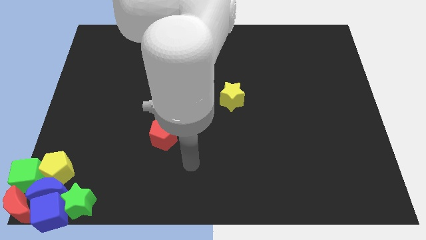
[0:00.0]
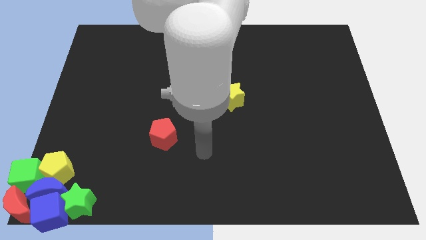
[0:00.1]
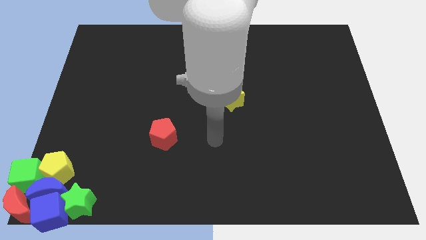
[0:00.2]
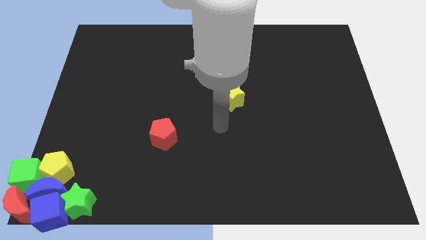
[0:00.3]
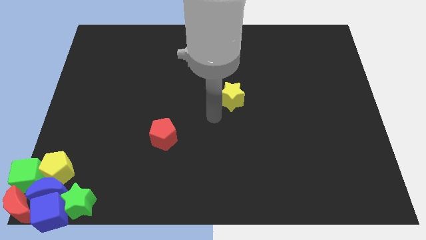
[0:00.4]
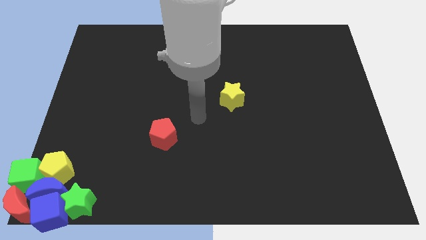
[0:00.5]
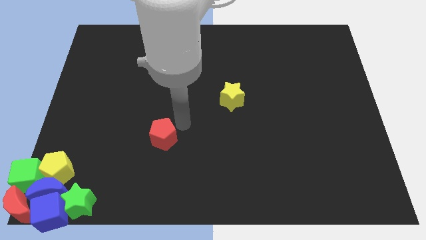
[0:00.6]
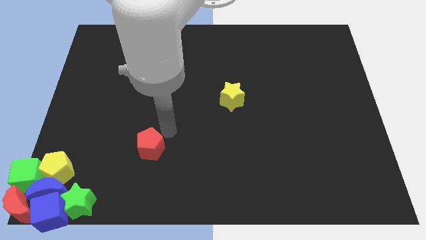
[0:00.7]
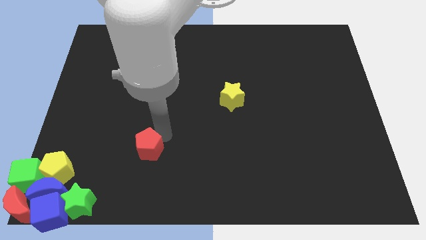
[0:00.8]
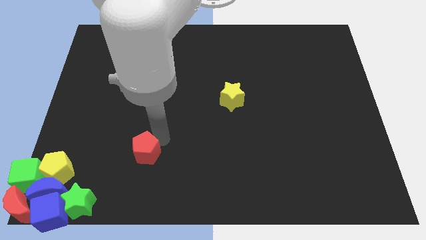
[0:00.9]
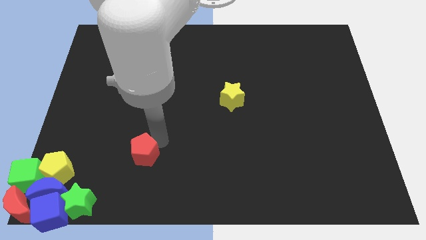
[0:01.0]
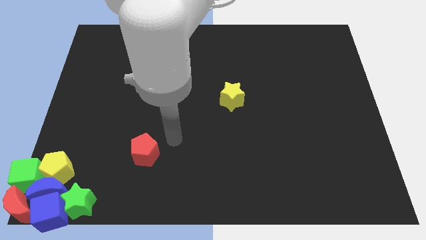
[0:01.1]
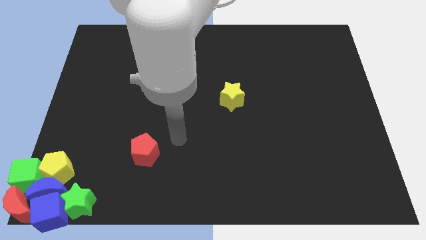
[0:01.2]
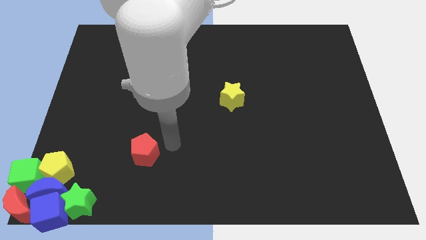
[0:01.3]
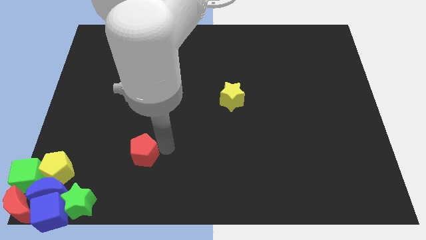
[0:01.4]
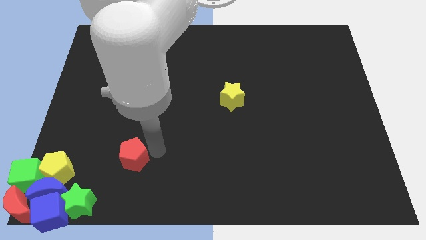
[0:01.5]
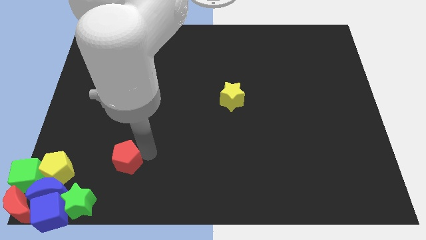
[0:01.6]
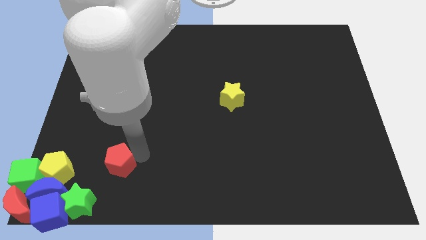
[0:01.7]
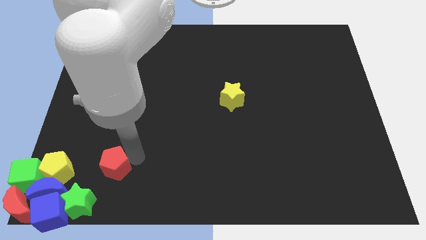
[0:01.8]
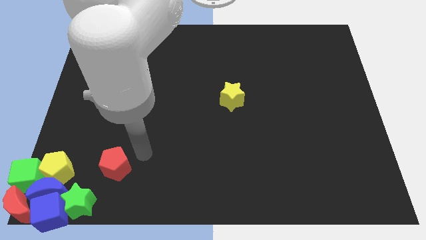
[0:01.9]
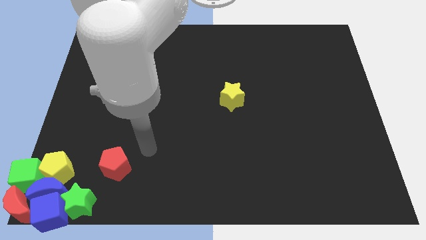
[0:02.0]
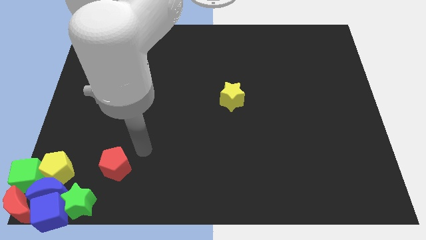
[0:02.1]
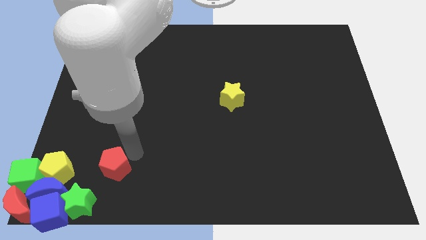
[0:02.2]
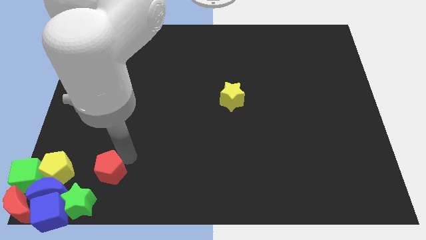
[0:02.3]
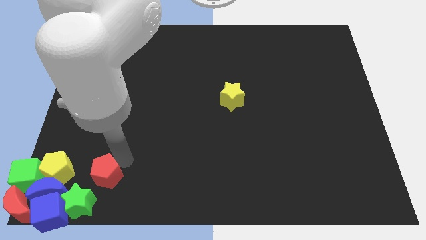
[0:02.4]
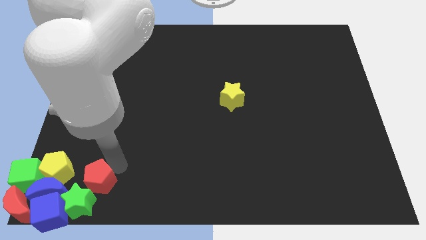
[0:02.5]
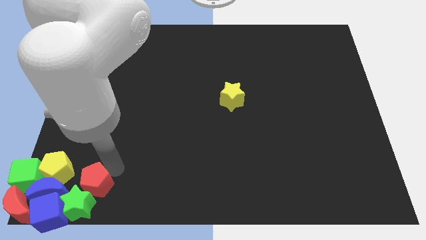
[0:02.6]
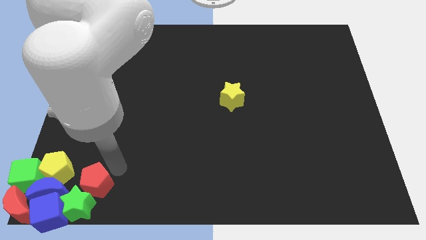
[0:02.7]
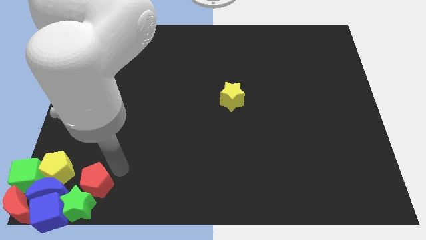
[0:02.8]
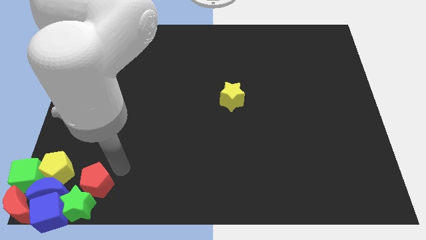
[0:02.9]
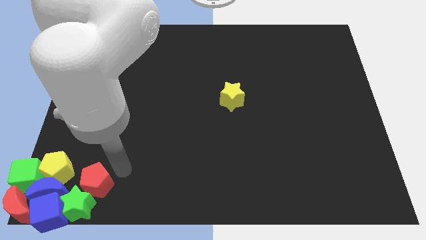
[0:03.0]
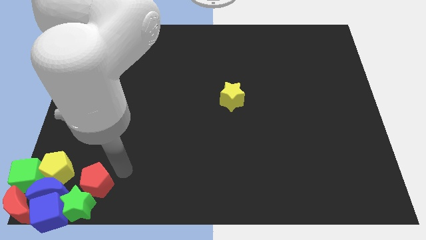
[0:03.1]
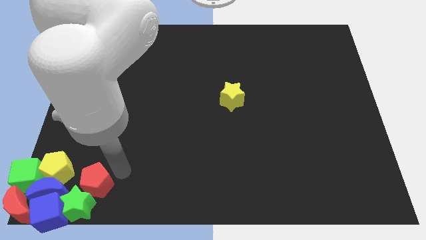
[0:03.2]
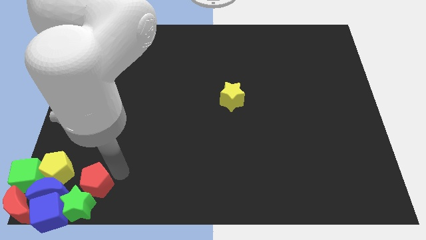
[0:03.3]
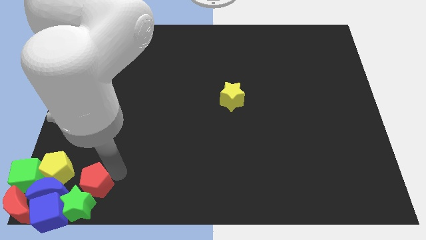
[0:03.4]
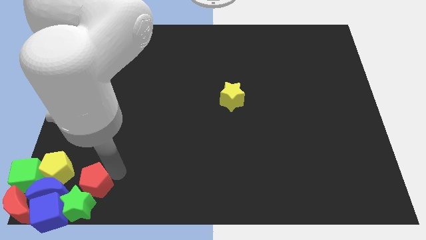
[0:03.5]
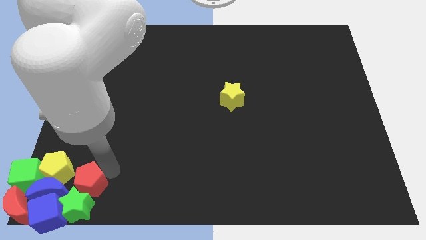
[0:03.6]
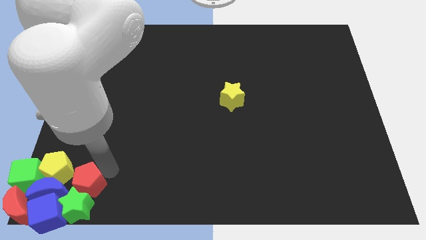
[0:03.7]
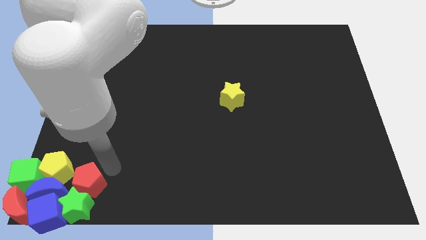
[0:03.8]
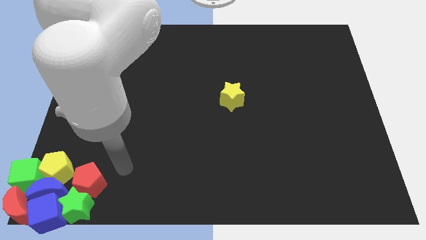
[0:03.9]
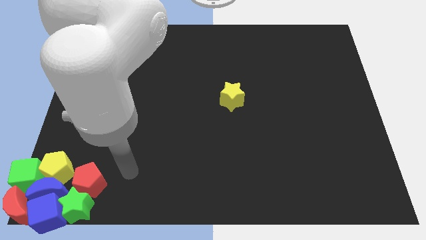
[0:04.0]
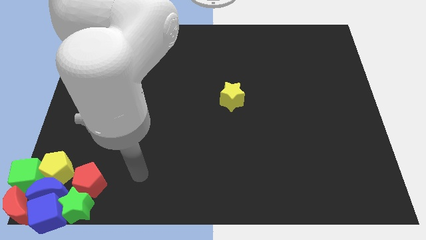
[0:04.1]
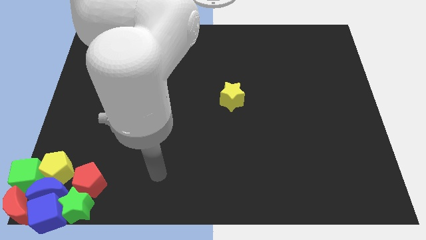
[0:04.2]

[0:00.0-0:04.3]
slide the red pentagon into the group of blocks at the bottom left corner of the board

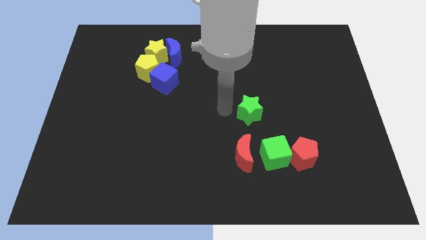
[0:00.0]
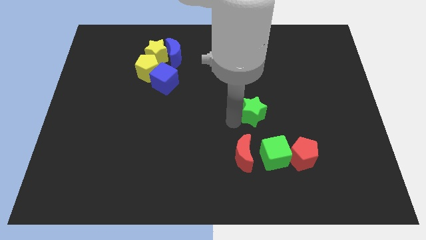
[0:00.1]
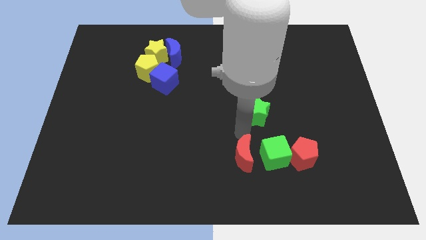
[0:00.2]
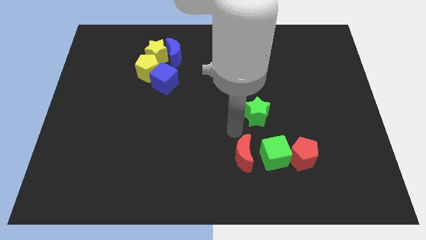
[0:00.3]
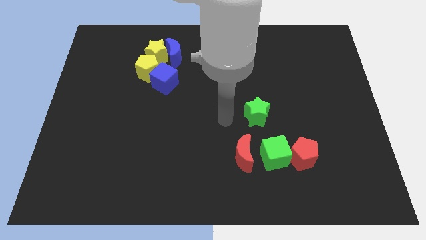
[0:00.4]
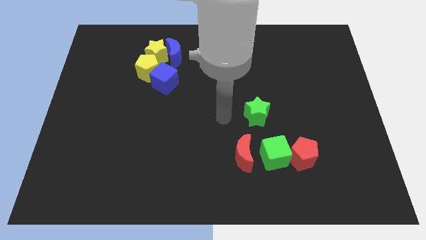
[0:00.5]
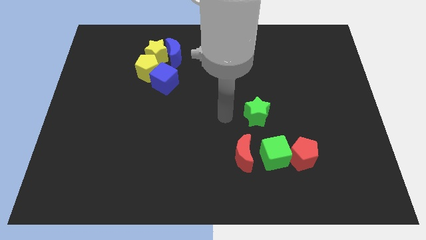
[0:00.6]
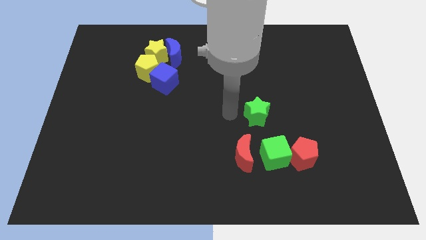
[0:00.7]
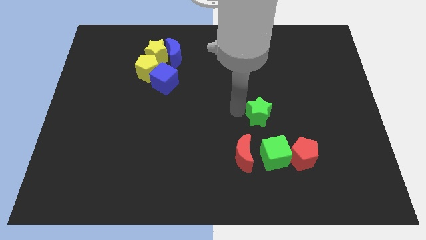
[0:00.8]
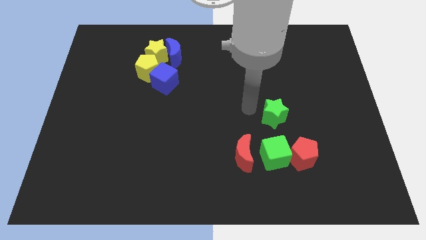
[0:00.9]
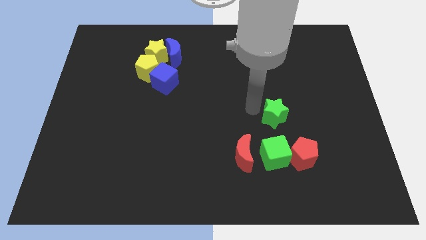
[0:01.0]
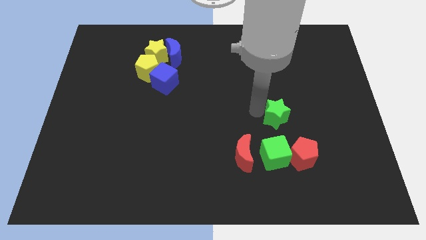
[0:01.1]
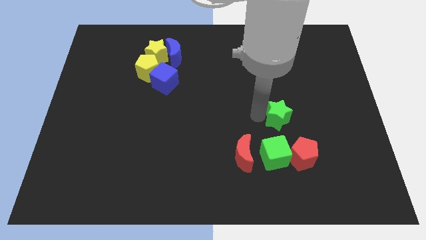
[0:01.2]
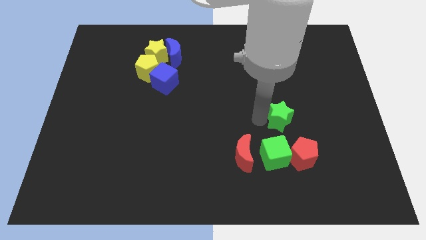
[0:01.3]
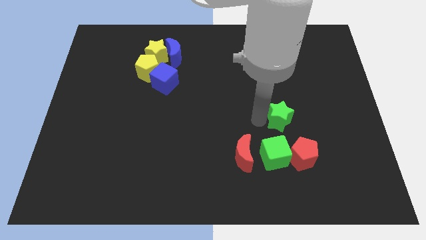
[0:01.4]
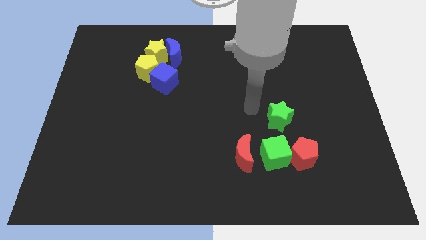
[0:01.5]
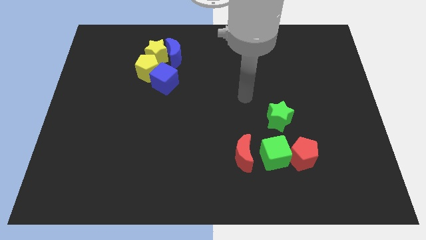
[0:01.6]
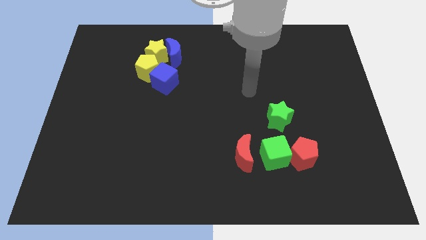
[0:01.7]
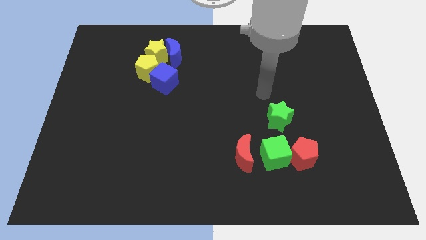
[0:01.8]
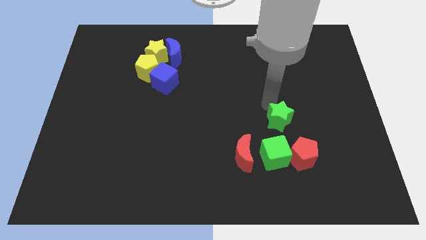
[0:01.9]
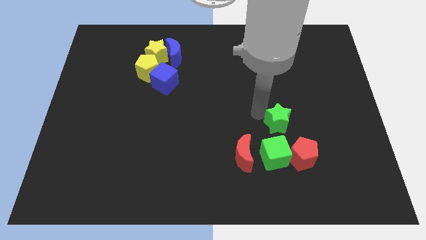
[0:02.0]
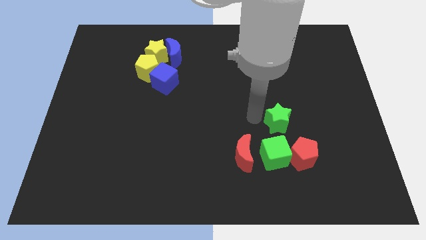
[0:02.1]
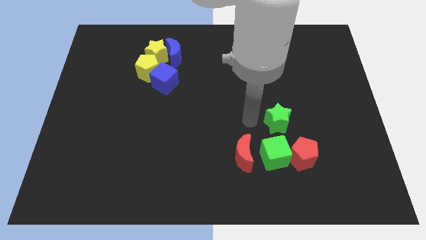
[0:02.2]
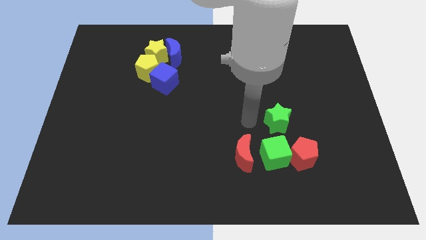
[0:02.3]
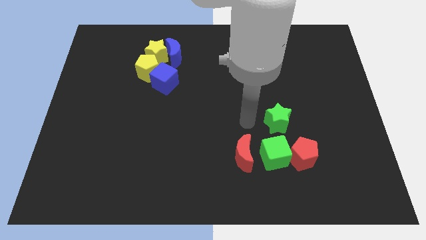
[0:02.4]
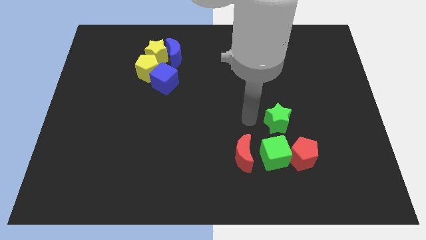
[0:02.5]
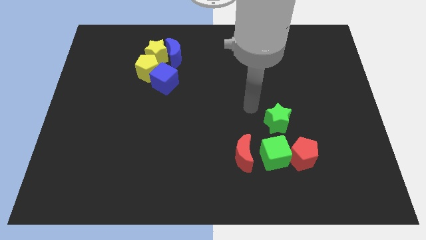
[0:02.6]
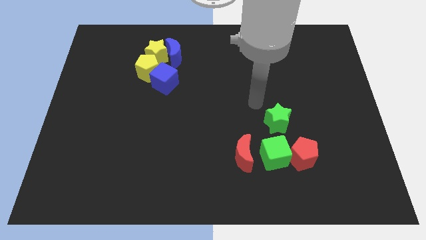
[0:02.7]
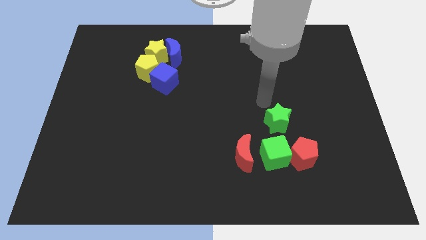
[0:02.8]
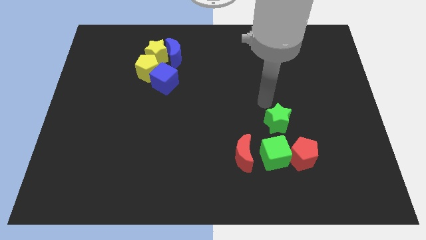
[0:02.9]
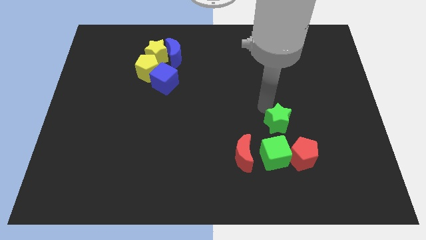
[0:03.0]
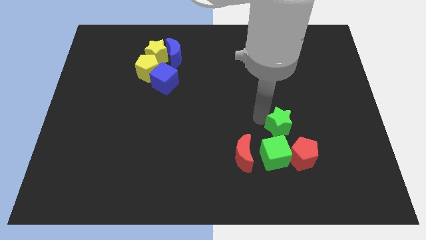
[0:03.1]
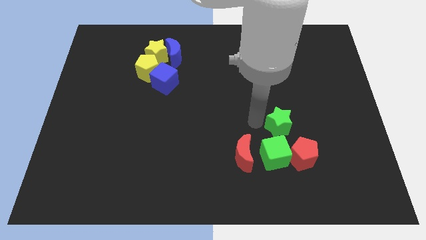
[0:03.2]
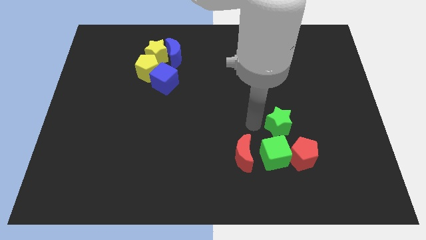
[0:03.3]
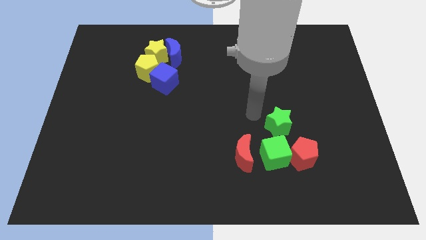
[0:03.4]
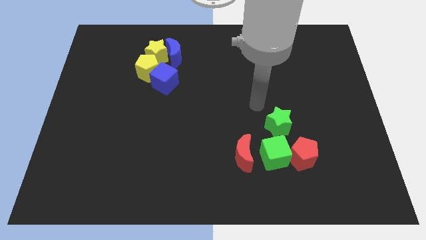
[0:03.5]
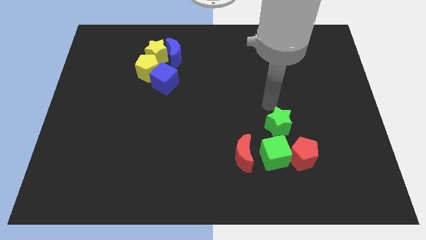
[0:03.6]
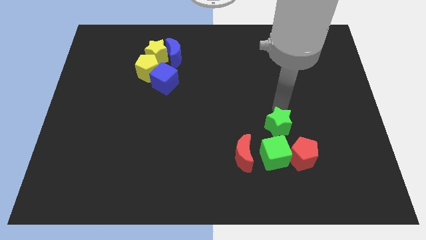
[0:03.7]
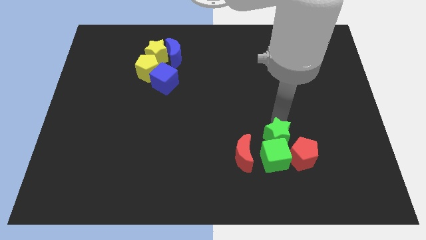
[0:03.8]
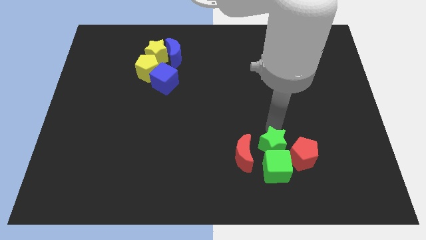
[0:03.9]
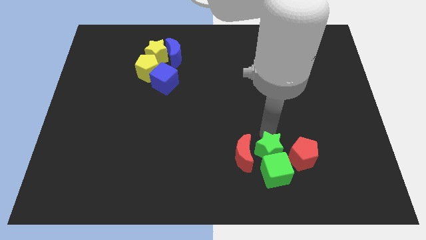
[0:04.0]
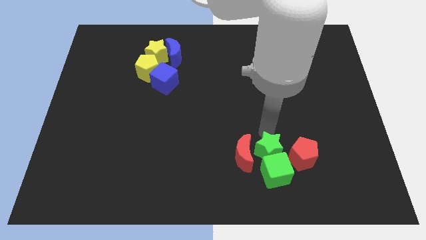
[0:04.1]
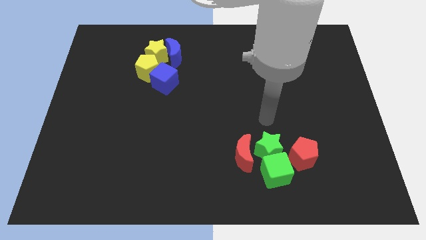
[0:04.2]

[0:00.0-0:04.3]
push the green star in between the red blocks

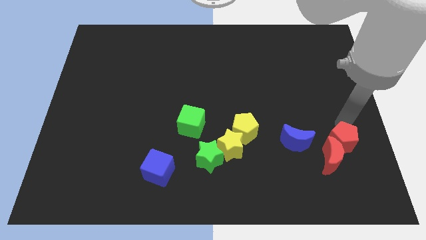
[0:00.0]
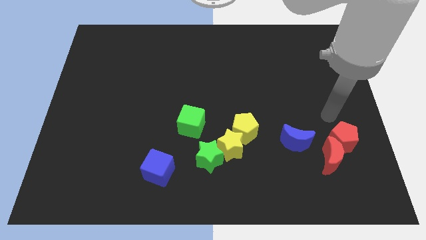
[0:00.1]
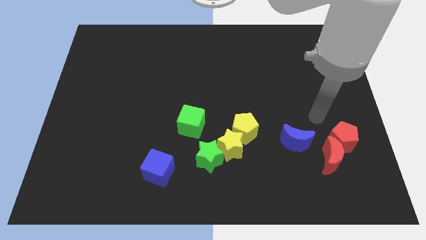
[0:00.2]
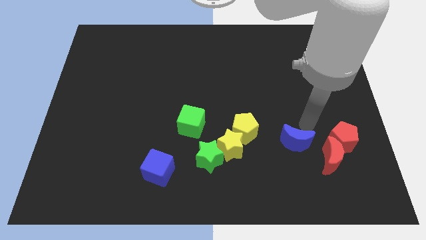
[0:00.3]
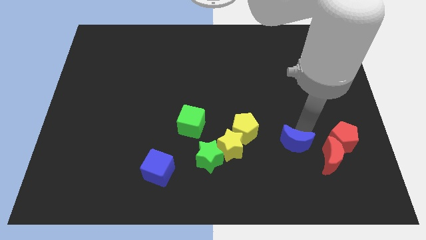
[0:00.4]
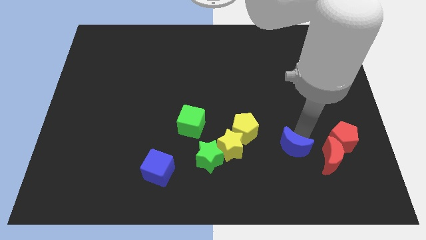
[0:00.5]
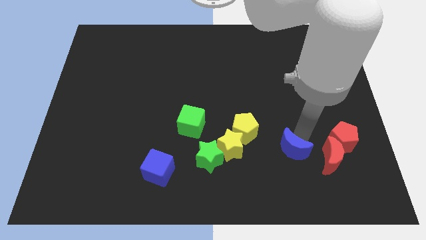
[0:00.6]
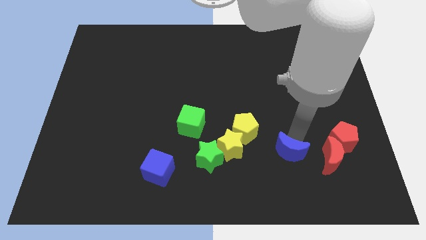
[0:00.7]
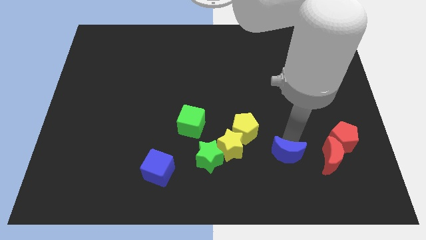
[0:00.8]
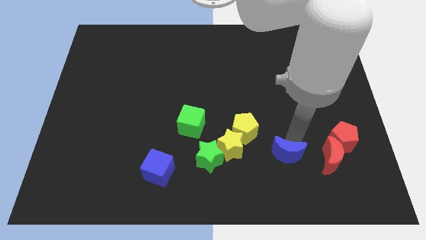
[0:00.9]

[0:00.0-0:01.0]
place the blue moon right to the yellow star
